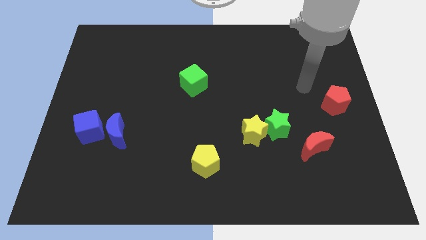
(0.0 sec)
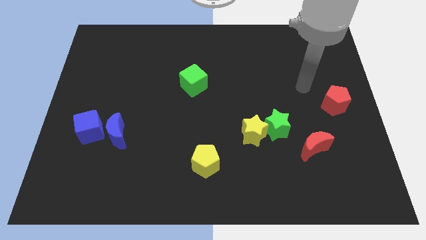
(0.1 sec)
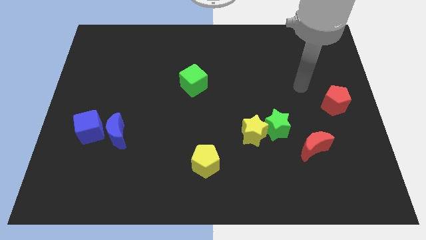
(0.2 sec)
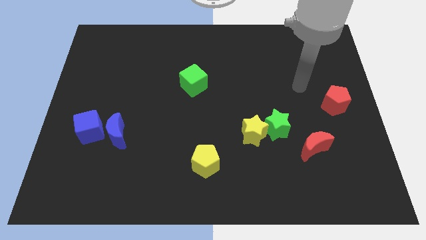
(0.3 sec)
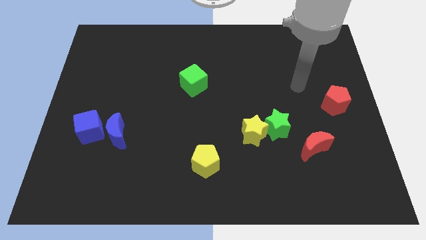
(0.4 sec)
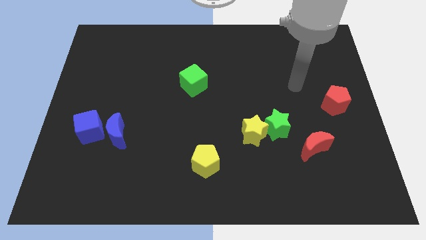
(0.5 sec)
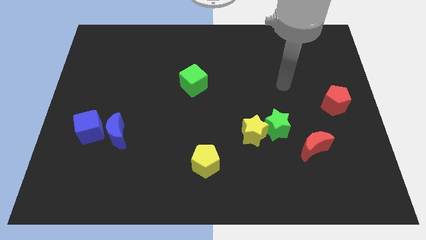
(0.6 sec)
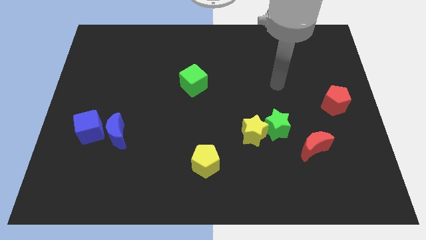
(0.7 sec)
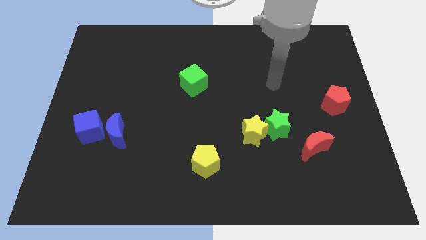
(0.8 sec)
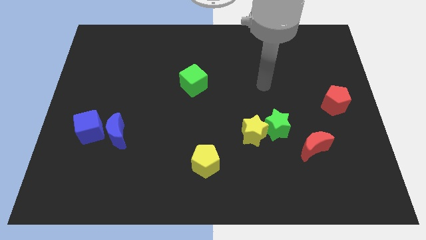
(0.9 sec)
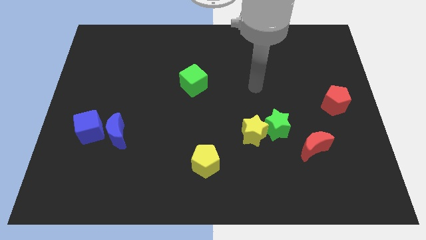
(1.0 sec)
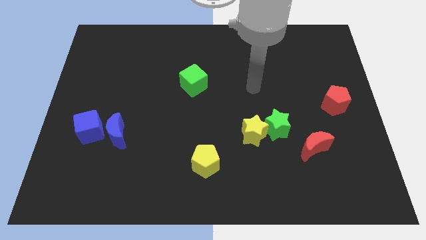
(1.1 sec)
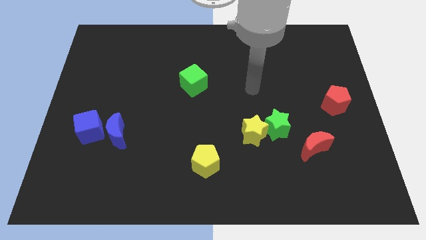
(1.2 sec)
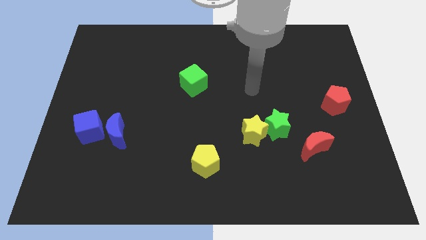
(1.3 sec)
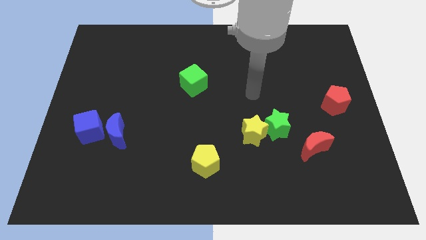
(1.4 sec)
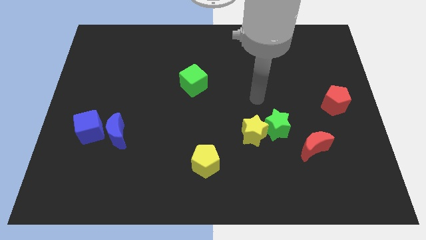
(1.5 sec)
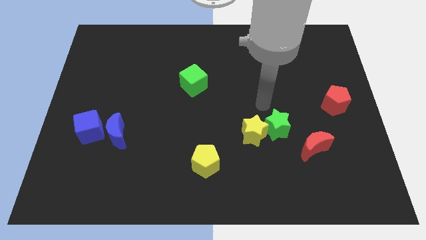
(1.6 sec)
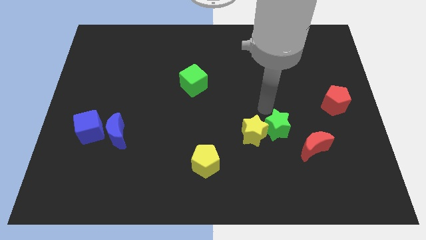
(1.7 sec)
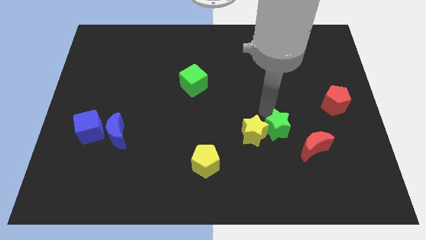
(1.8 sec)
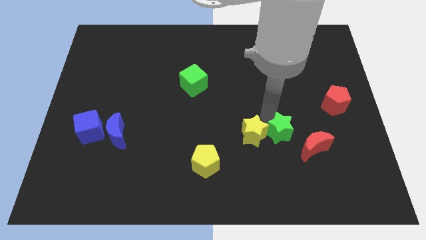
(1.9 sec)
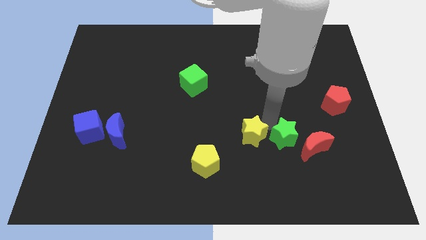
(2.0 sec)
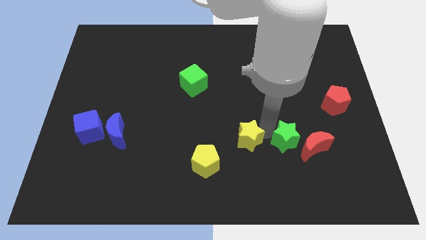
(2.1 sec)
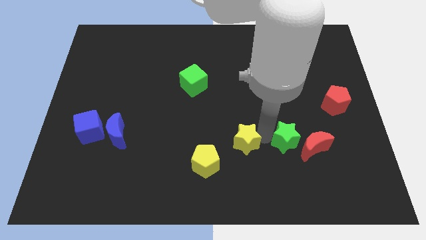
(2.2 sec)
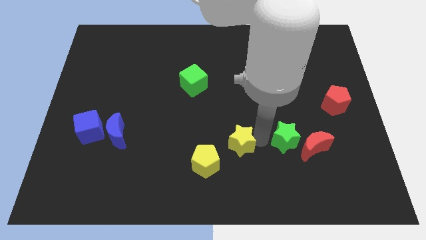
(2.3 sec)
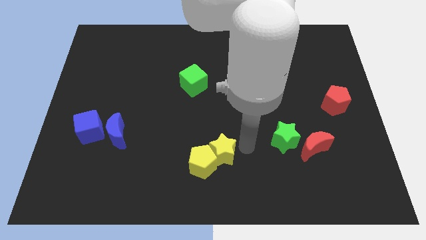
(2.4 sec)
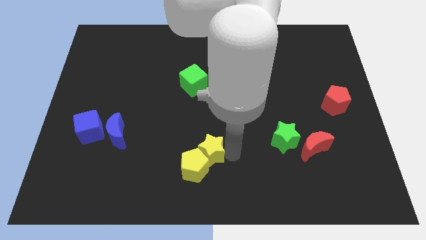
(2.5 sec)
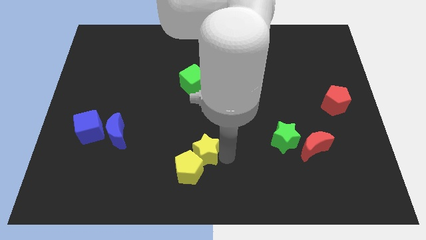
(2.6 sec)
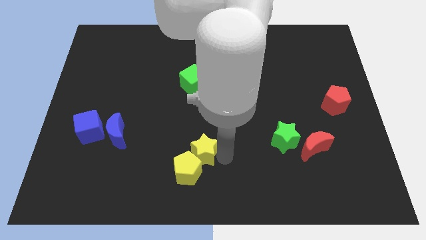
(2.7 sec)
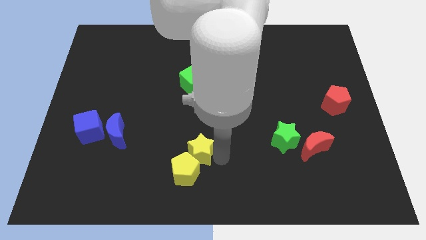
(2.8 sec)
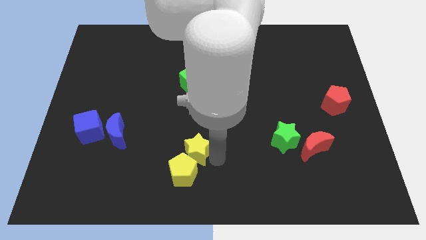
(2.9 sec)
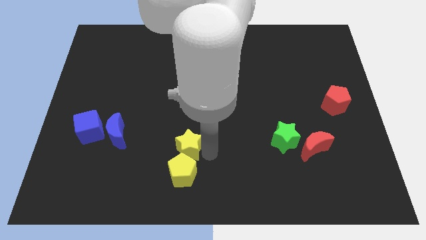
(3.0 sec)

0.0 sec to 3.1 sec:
push the yellow star into the yellow pentagon

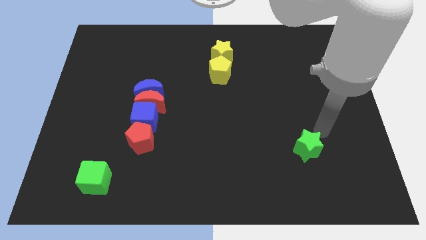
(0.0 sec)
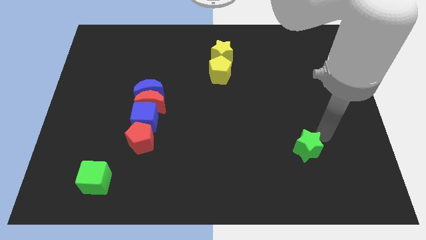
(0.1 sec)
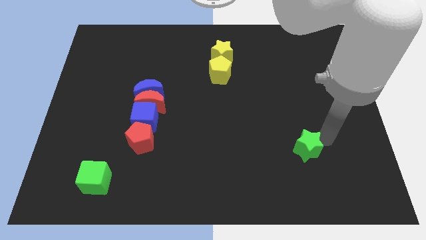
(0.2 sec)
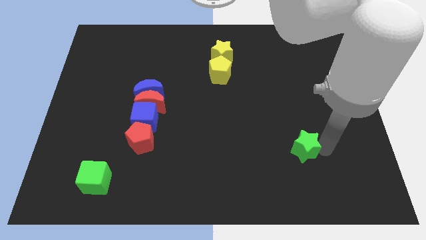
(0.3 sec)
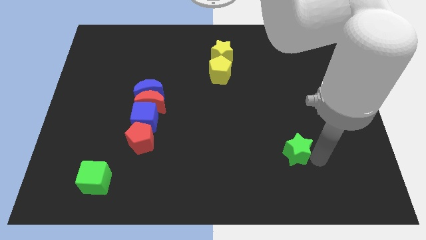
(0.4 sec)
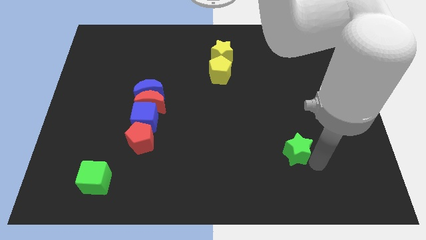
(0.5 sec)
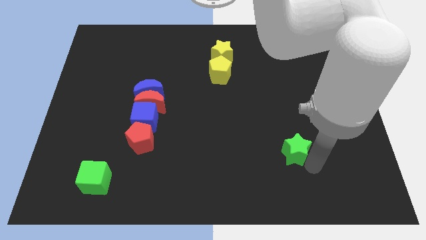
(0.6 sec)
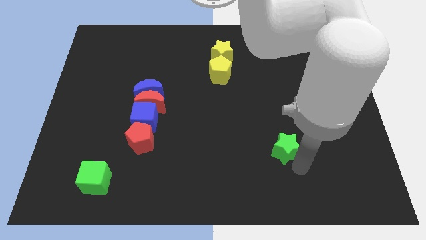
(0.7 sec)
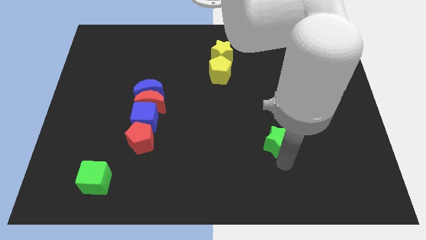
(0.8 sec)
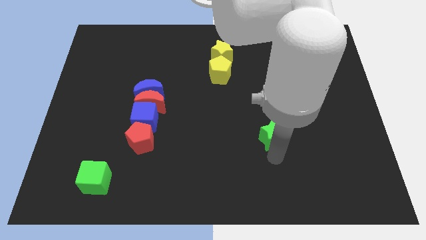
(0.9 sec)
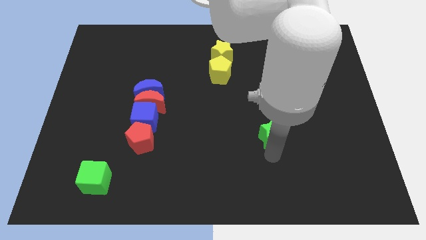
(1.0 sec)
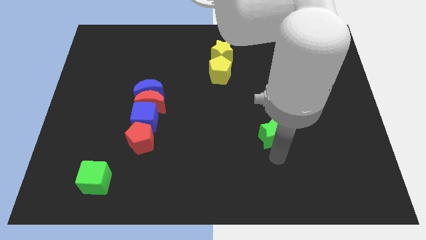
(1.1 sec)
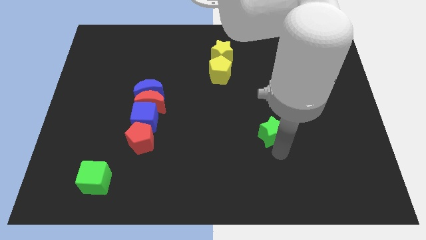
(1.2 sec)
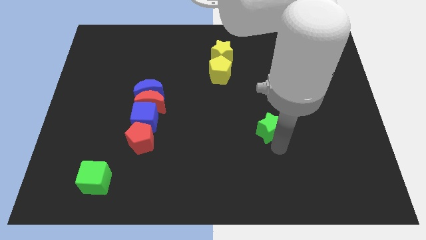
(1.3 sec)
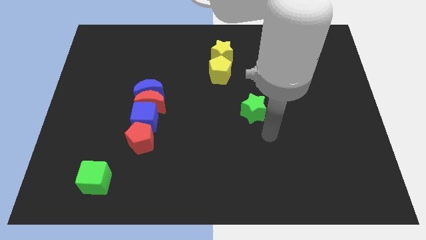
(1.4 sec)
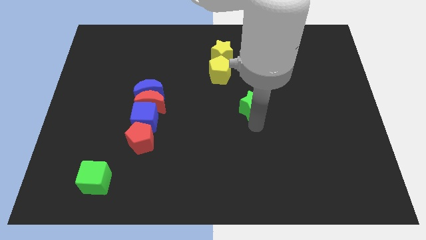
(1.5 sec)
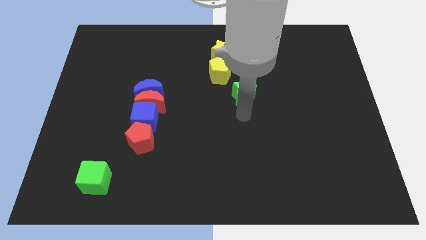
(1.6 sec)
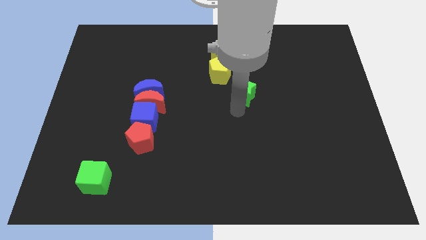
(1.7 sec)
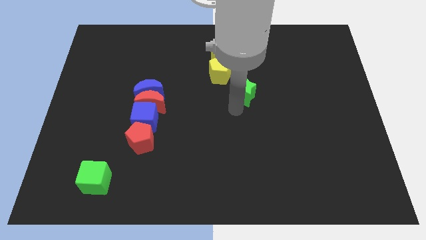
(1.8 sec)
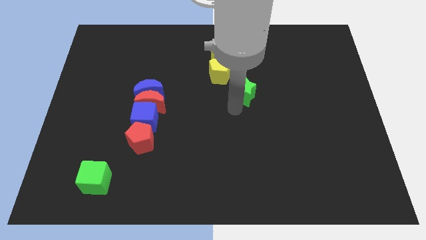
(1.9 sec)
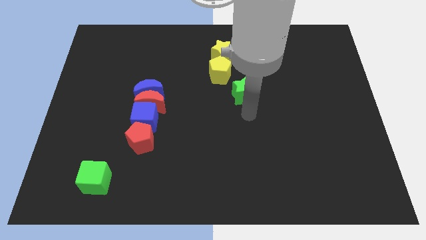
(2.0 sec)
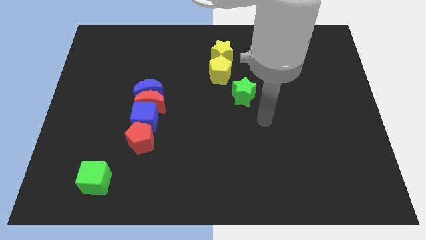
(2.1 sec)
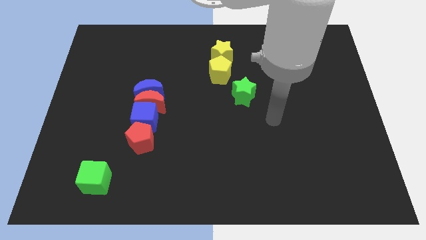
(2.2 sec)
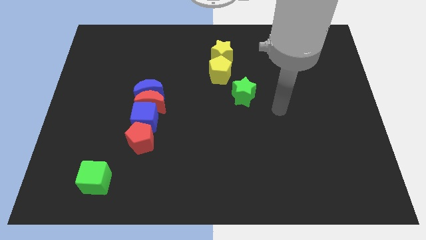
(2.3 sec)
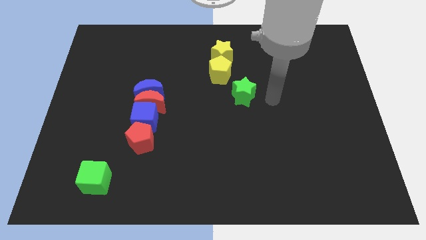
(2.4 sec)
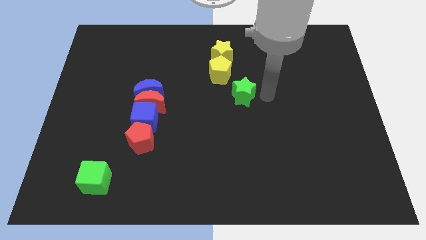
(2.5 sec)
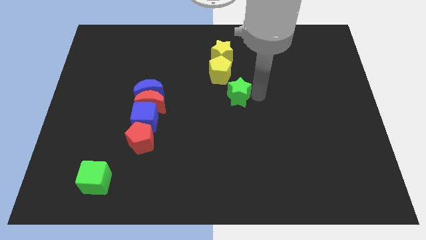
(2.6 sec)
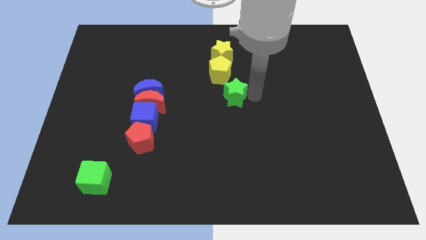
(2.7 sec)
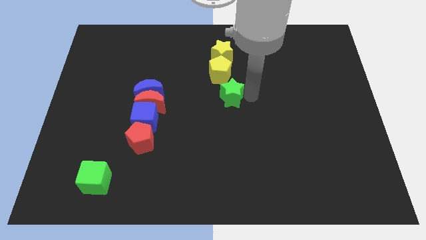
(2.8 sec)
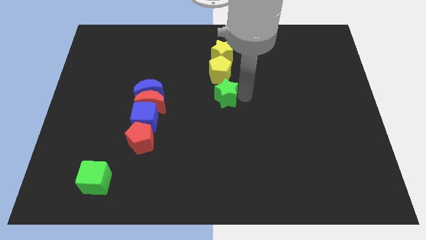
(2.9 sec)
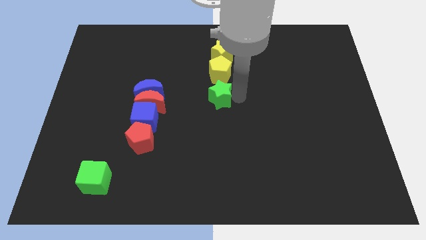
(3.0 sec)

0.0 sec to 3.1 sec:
slide the green star to the bottom of the yellow pentagon to form a vertical line

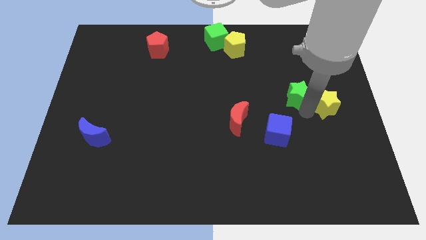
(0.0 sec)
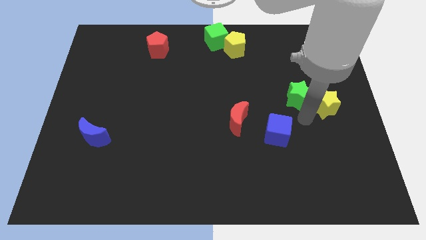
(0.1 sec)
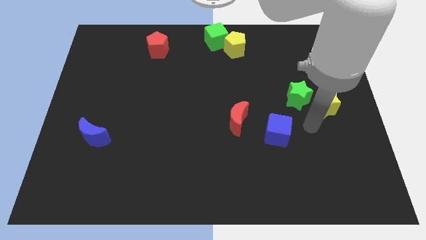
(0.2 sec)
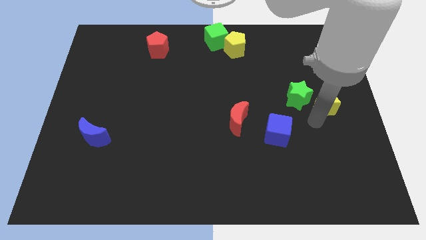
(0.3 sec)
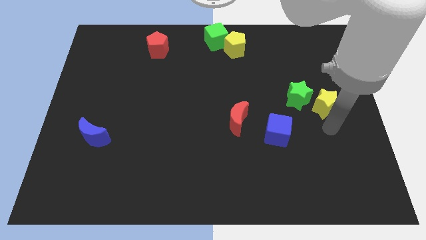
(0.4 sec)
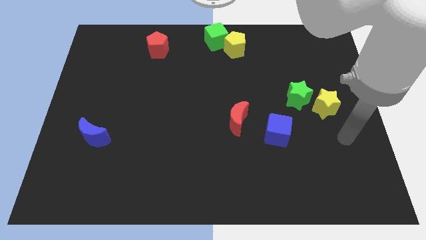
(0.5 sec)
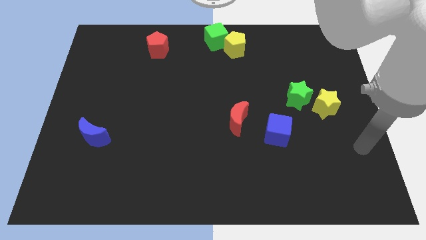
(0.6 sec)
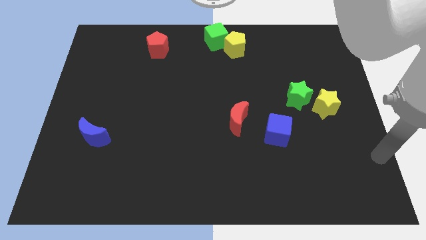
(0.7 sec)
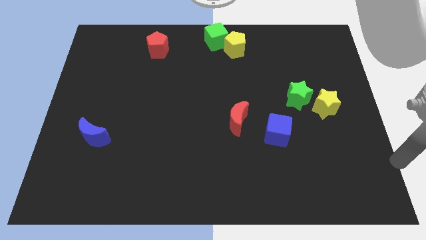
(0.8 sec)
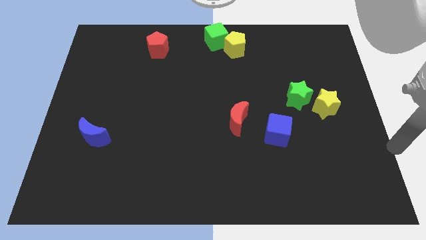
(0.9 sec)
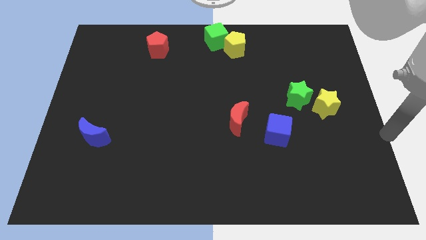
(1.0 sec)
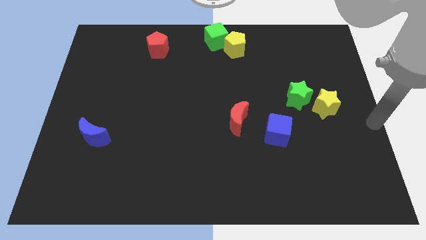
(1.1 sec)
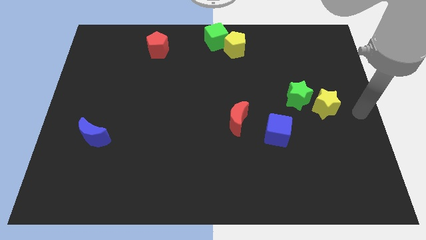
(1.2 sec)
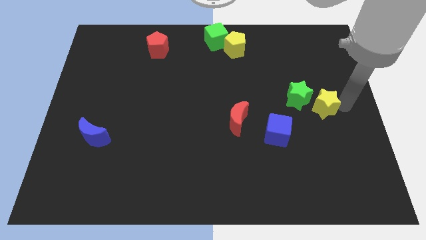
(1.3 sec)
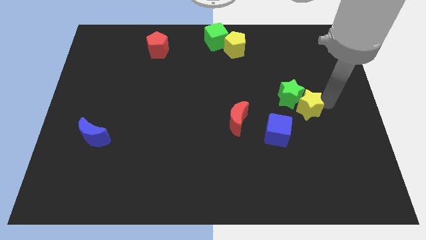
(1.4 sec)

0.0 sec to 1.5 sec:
move your arm around the yellow star

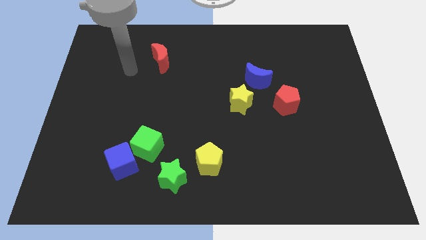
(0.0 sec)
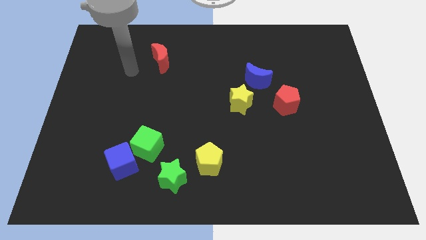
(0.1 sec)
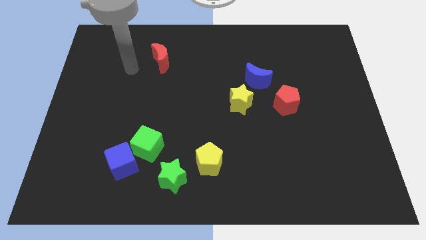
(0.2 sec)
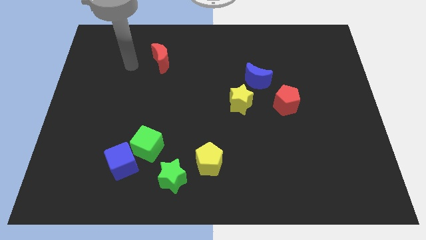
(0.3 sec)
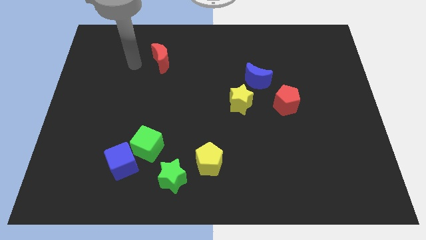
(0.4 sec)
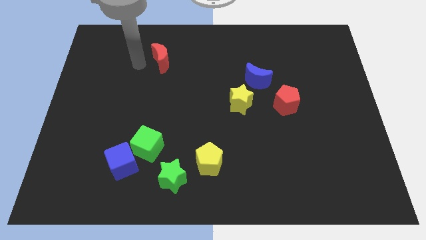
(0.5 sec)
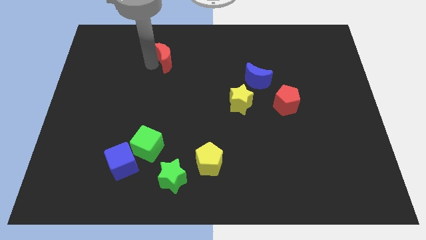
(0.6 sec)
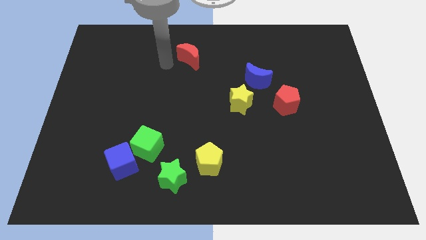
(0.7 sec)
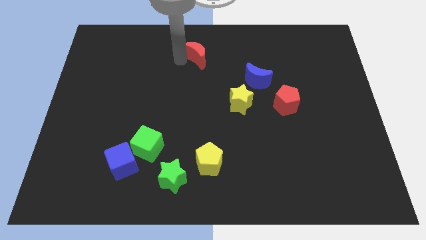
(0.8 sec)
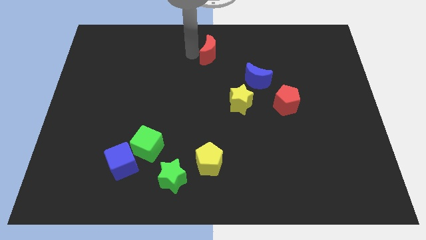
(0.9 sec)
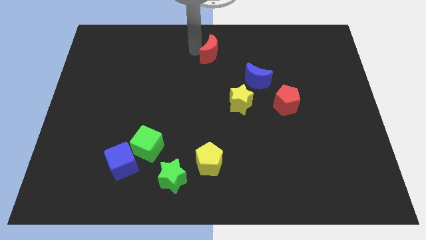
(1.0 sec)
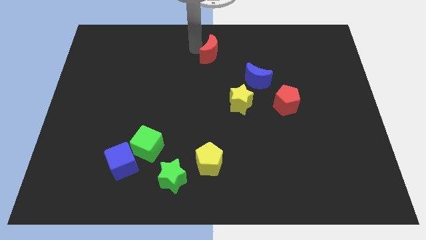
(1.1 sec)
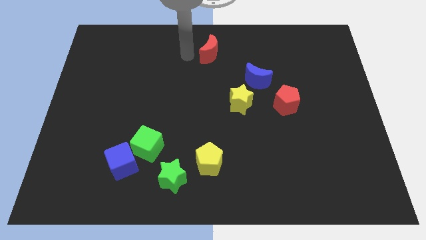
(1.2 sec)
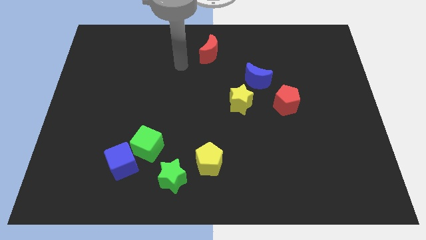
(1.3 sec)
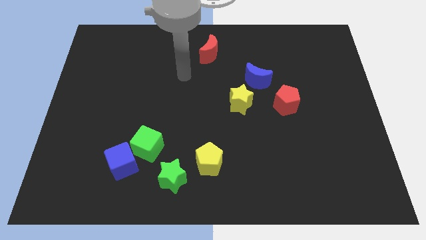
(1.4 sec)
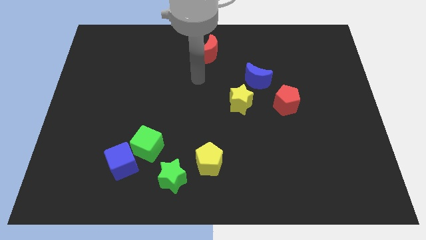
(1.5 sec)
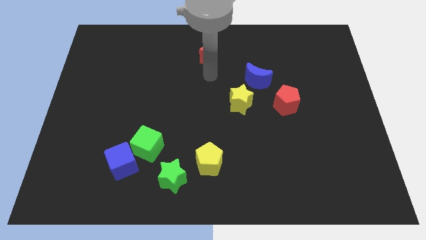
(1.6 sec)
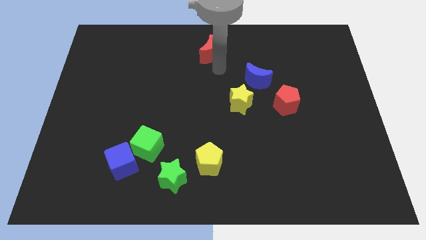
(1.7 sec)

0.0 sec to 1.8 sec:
move the red moon slightly to the right side of the board
